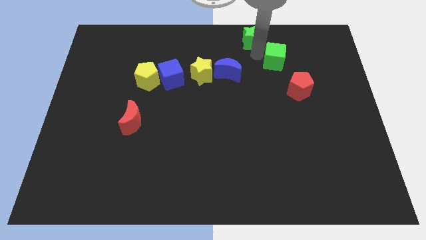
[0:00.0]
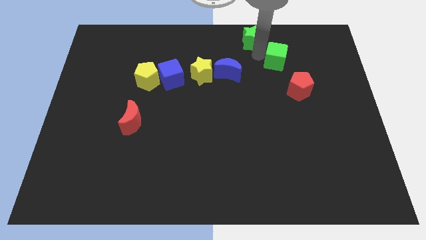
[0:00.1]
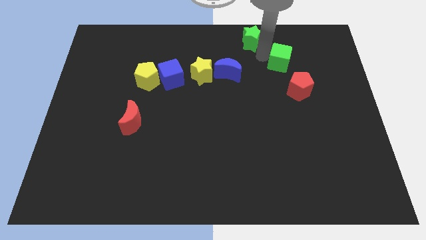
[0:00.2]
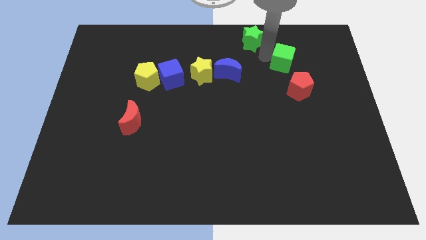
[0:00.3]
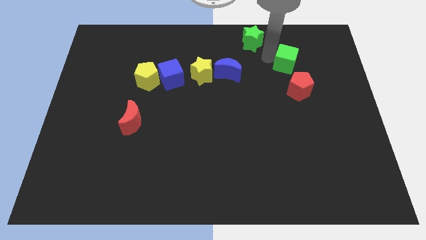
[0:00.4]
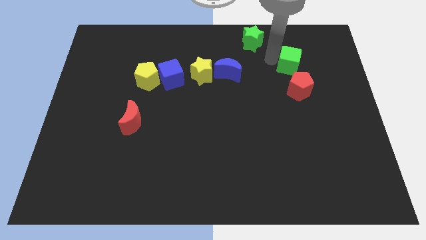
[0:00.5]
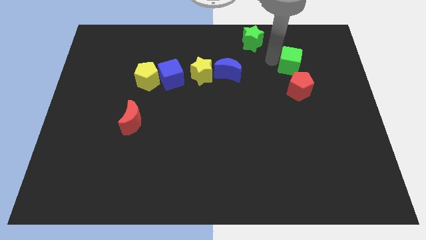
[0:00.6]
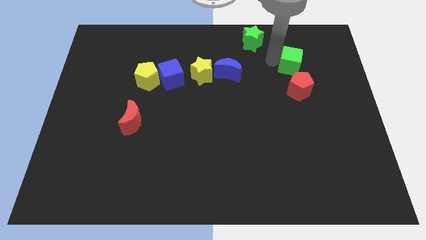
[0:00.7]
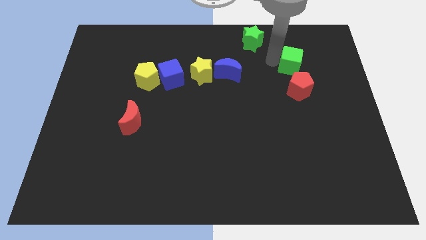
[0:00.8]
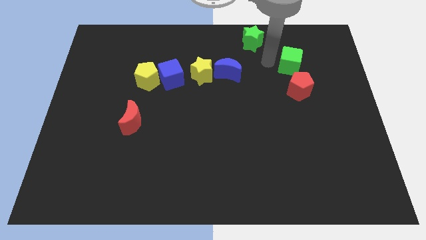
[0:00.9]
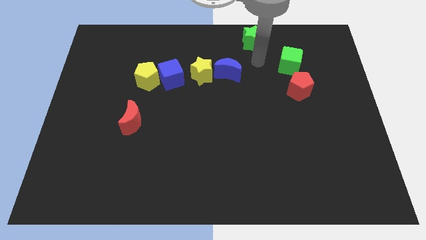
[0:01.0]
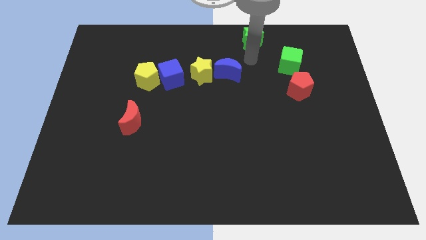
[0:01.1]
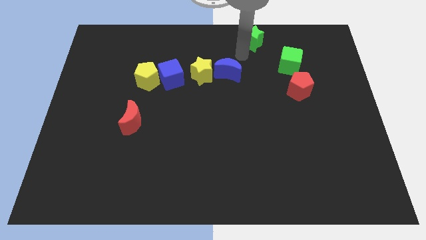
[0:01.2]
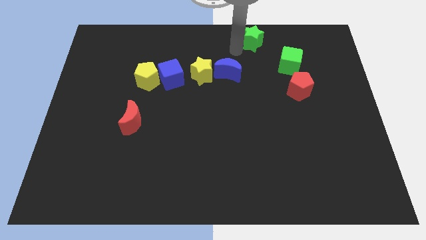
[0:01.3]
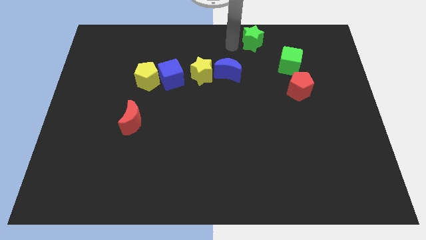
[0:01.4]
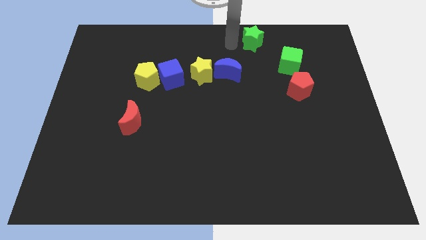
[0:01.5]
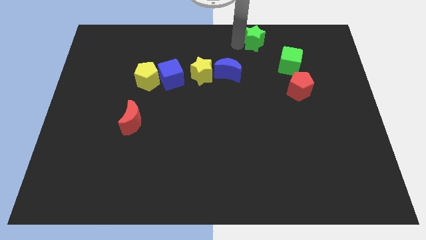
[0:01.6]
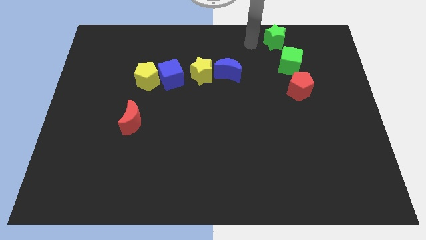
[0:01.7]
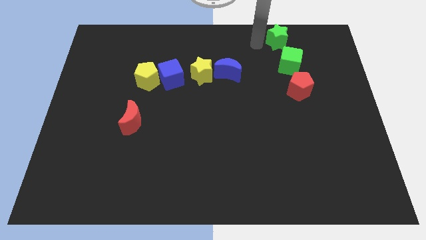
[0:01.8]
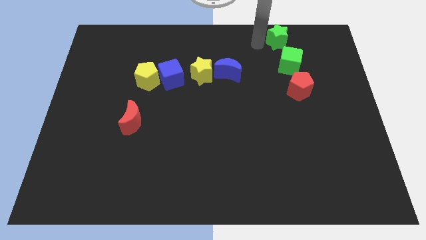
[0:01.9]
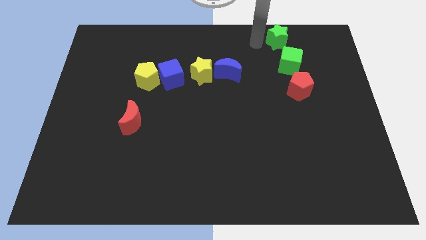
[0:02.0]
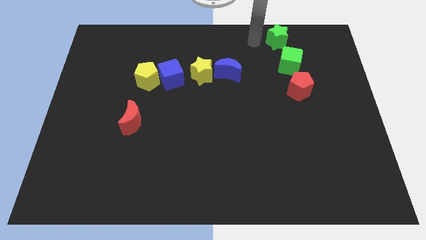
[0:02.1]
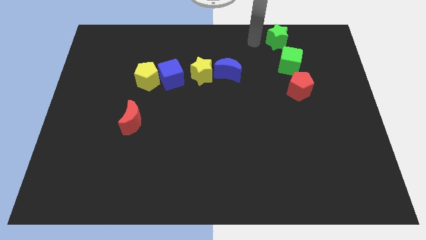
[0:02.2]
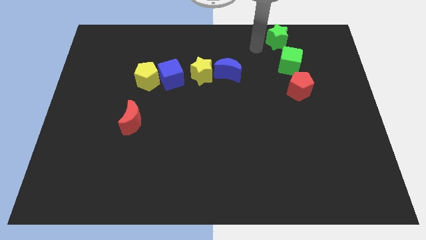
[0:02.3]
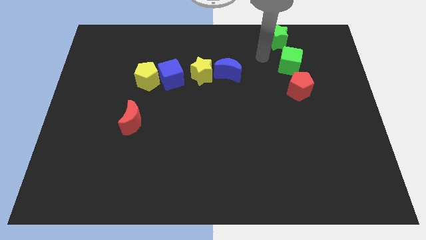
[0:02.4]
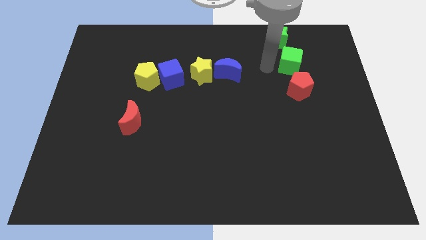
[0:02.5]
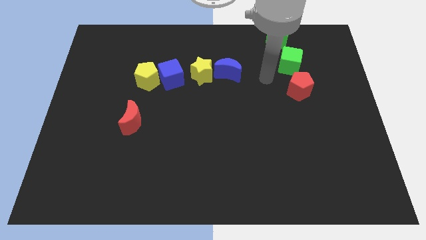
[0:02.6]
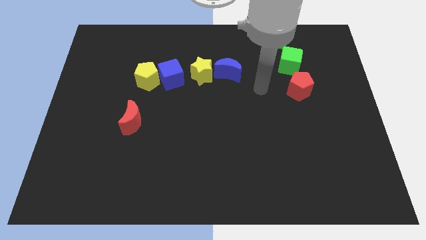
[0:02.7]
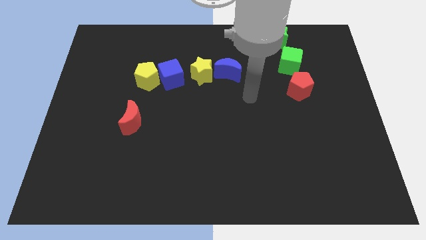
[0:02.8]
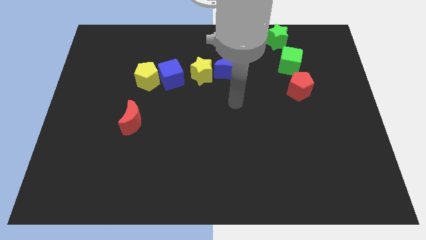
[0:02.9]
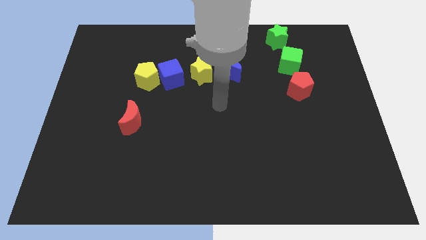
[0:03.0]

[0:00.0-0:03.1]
move the green cube in between green star and red pentagon

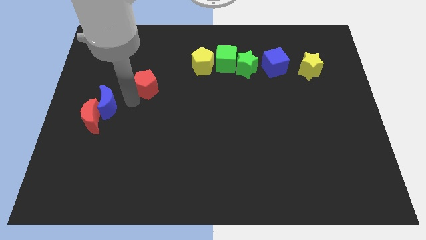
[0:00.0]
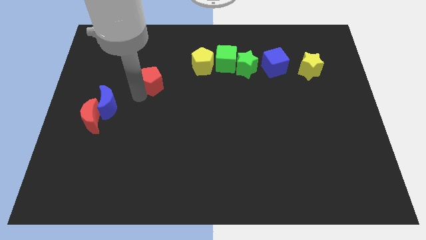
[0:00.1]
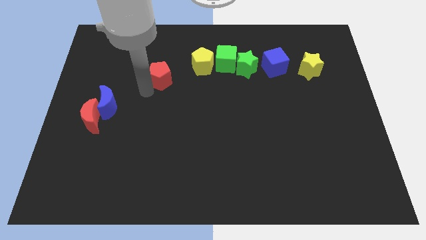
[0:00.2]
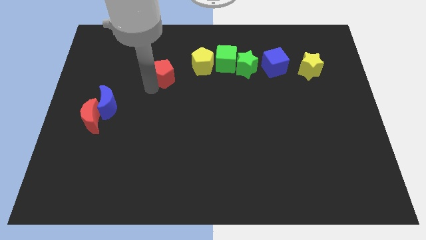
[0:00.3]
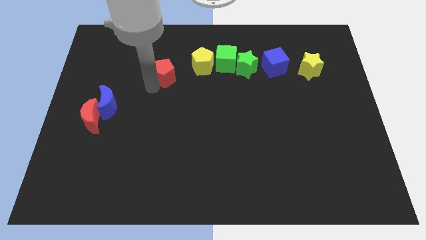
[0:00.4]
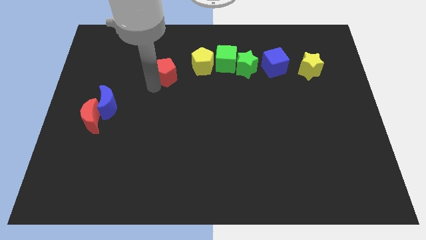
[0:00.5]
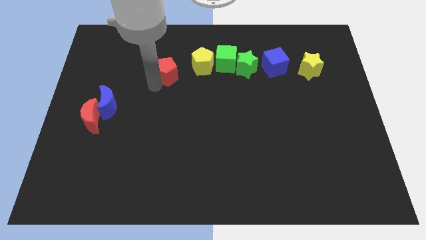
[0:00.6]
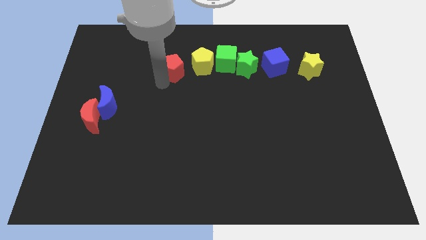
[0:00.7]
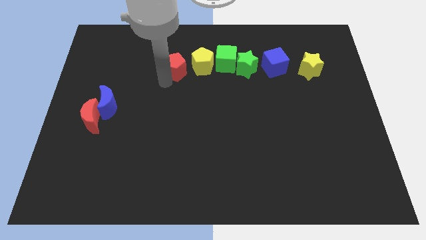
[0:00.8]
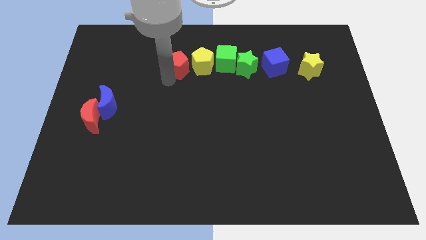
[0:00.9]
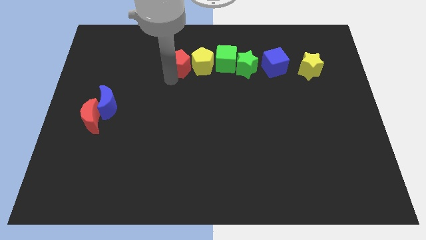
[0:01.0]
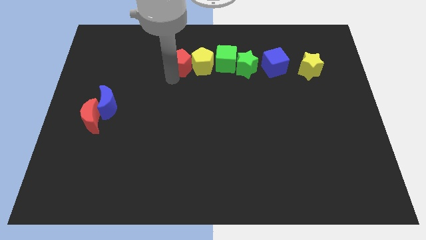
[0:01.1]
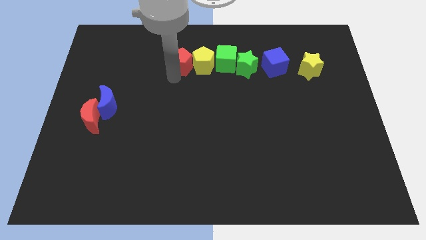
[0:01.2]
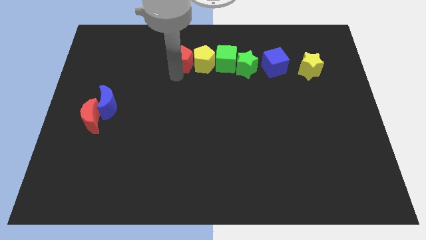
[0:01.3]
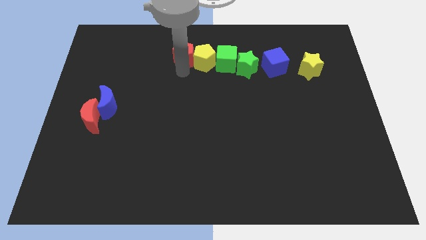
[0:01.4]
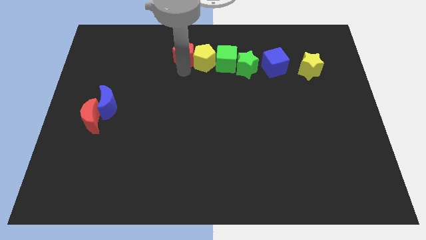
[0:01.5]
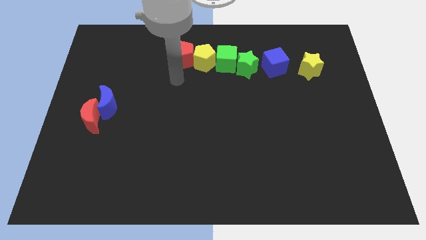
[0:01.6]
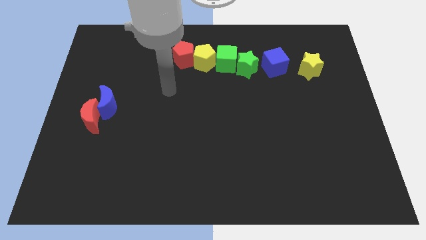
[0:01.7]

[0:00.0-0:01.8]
place the red pentagon to the left of the yellow pentagon

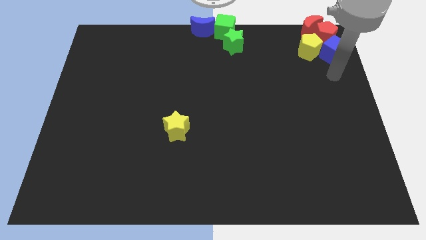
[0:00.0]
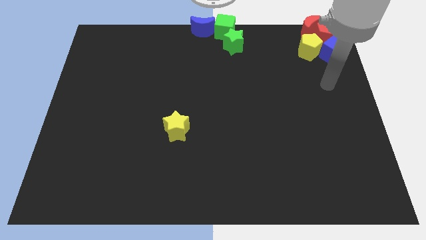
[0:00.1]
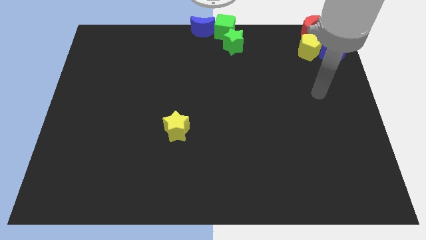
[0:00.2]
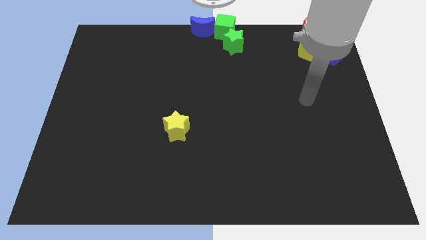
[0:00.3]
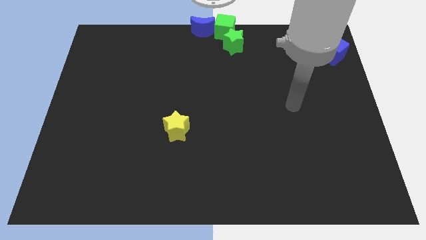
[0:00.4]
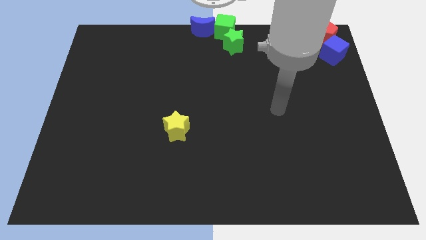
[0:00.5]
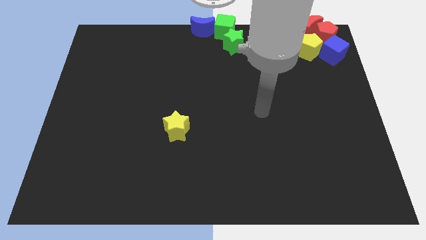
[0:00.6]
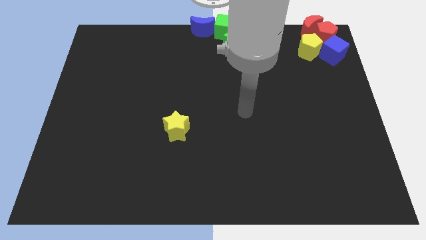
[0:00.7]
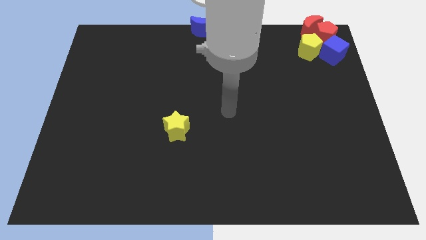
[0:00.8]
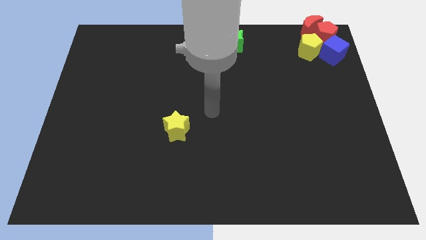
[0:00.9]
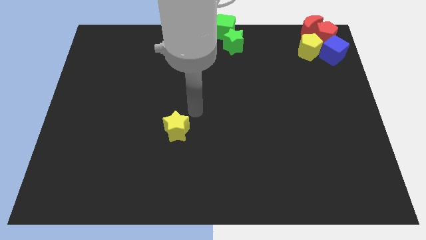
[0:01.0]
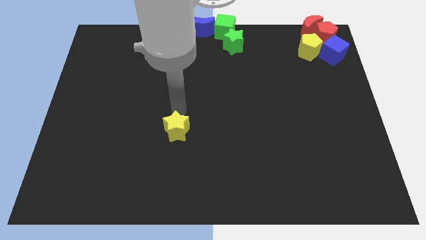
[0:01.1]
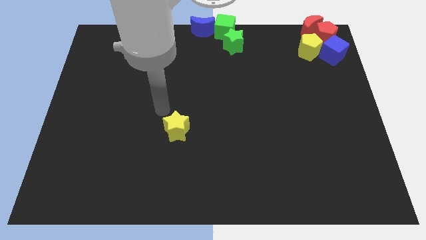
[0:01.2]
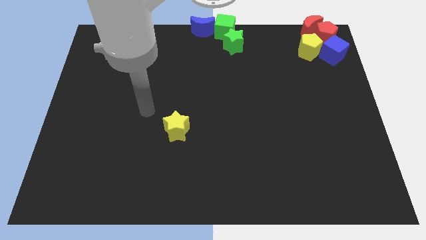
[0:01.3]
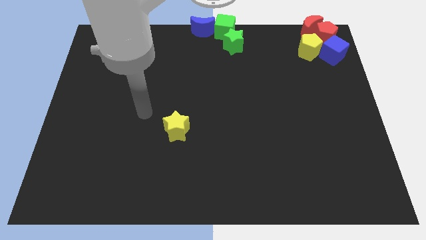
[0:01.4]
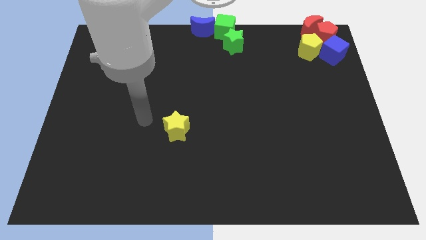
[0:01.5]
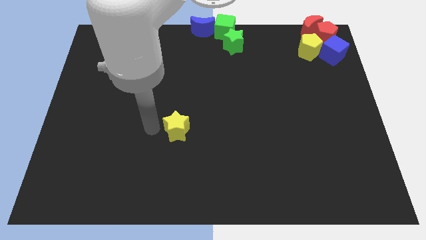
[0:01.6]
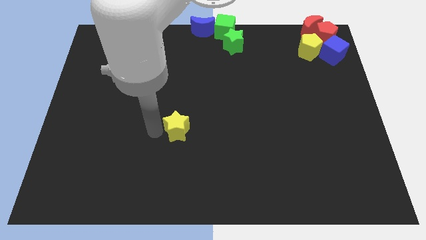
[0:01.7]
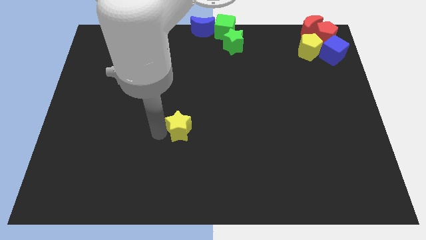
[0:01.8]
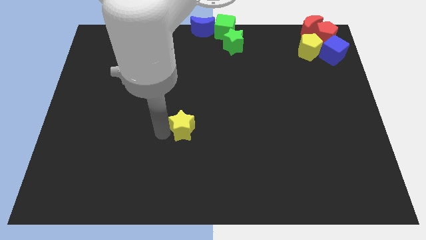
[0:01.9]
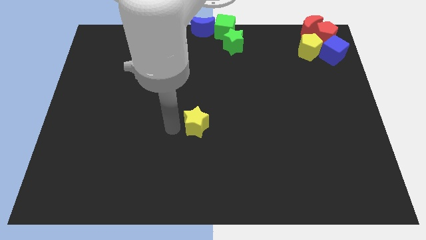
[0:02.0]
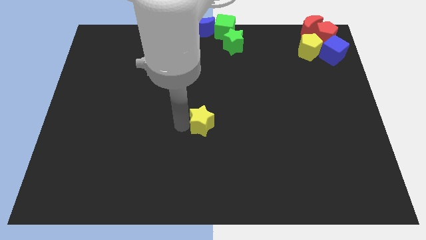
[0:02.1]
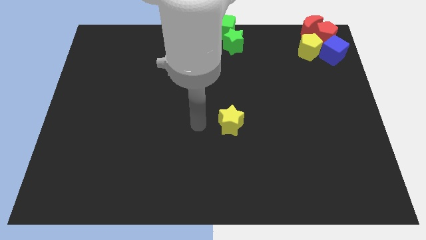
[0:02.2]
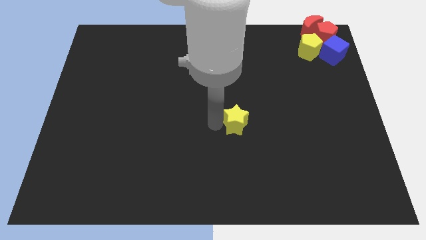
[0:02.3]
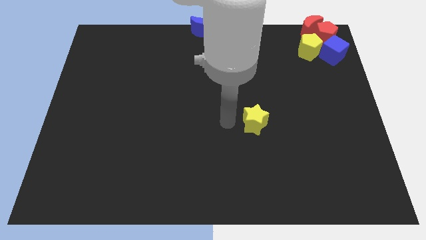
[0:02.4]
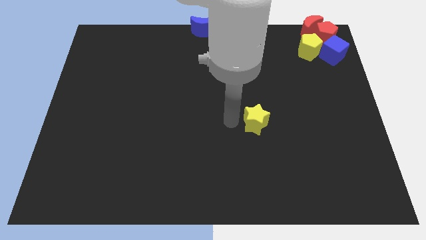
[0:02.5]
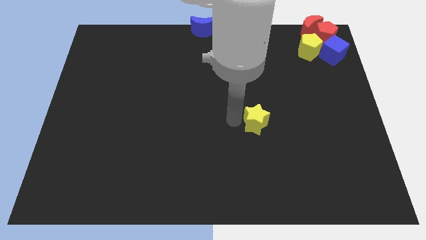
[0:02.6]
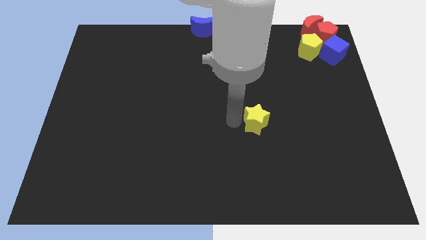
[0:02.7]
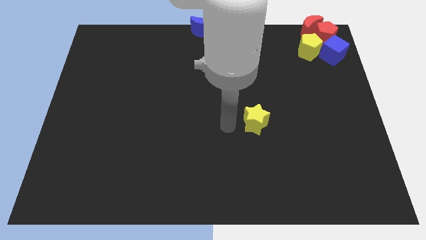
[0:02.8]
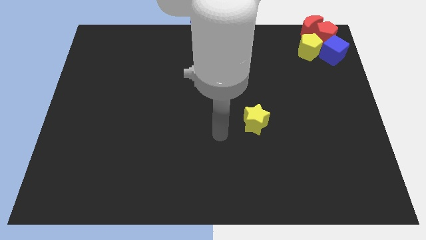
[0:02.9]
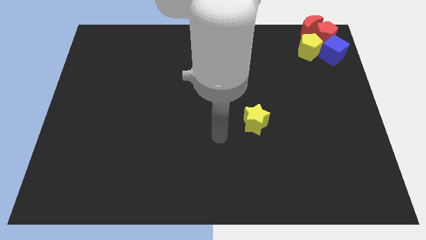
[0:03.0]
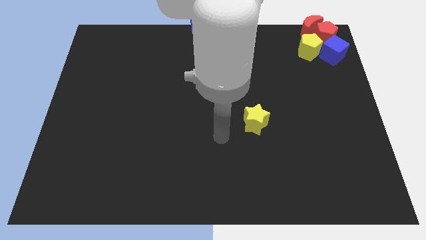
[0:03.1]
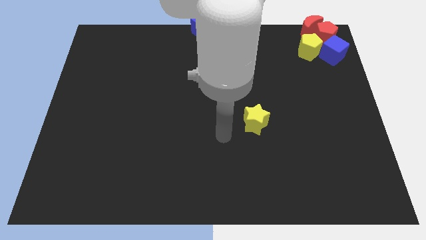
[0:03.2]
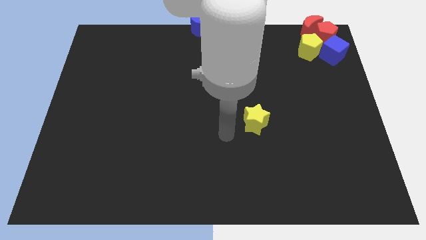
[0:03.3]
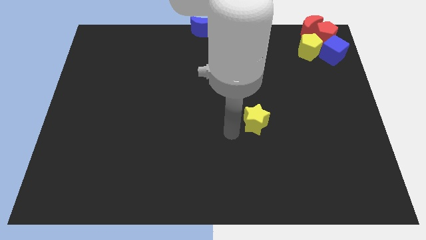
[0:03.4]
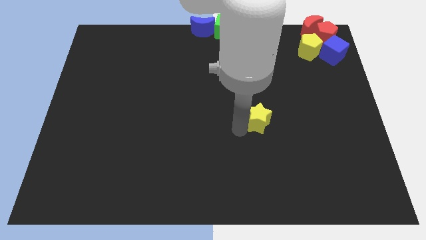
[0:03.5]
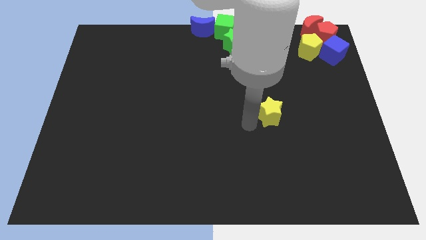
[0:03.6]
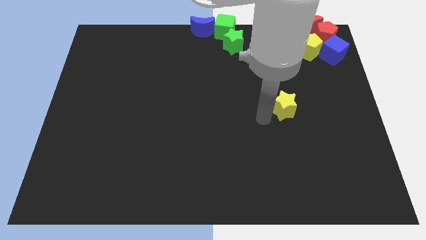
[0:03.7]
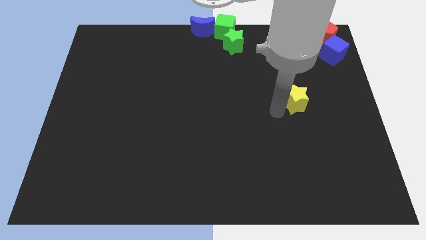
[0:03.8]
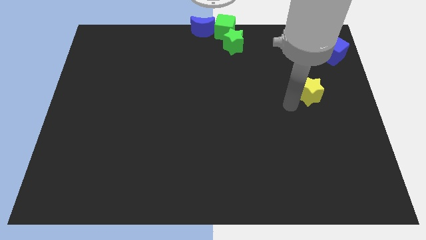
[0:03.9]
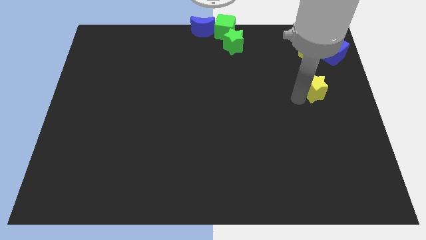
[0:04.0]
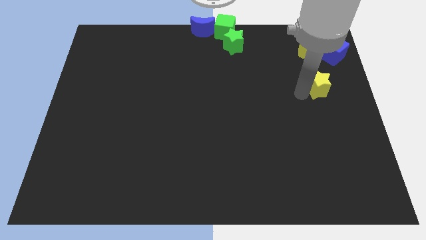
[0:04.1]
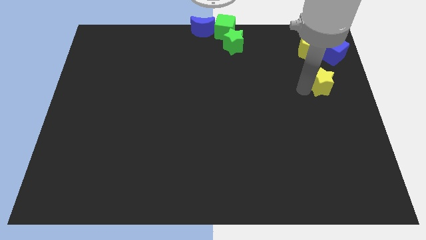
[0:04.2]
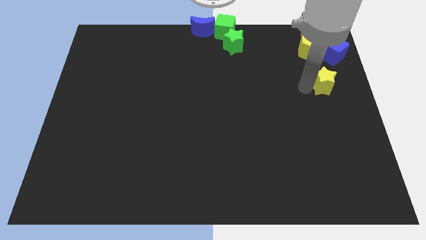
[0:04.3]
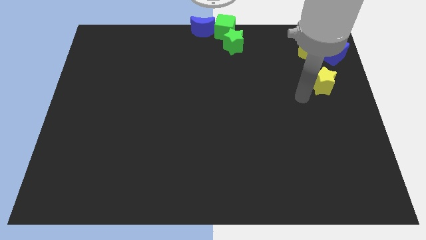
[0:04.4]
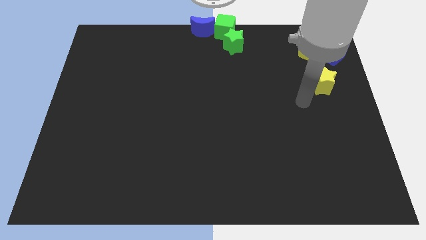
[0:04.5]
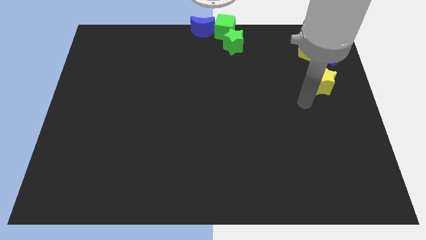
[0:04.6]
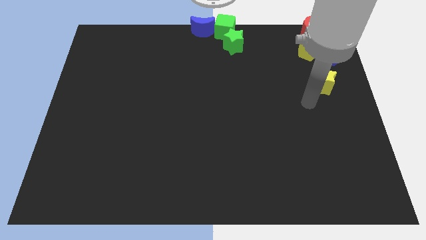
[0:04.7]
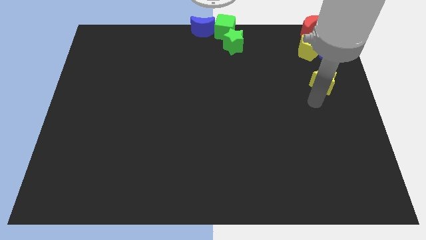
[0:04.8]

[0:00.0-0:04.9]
push the yellow star towards the top right corner of the board
